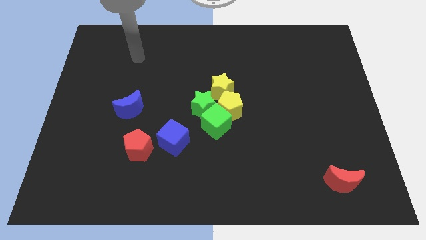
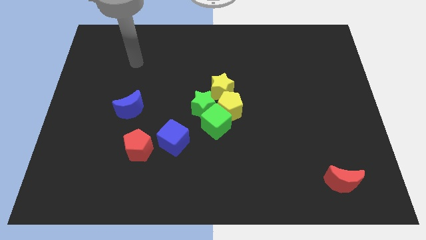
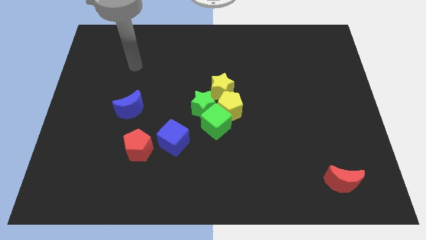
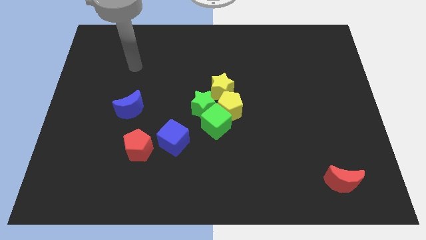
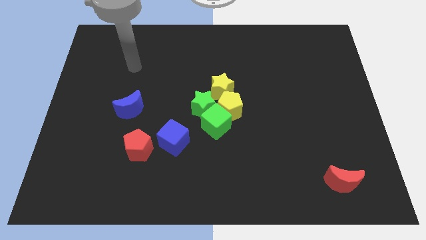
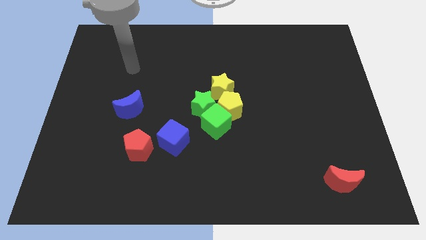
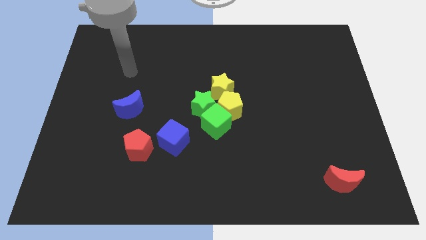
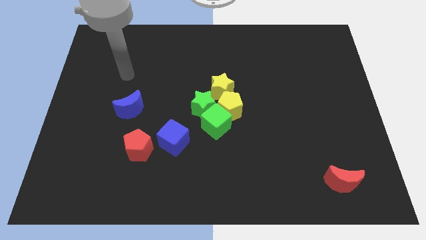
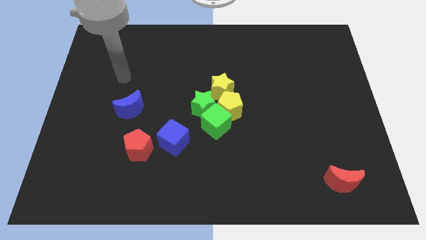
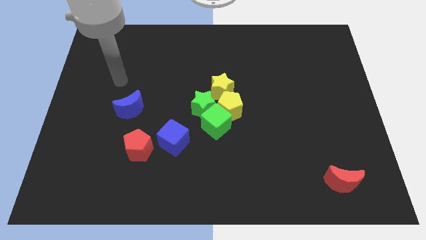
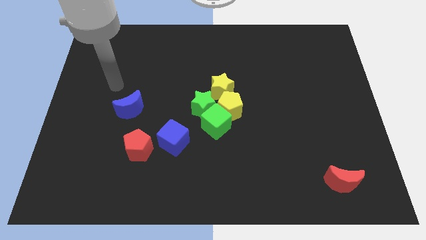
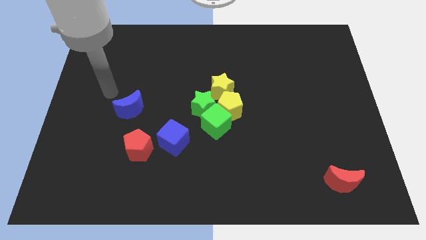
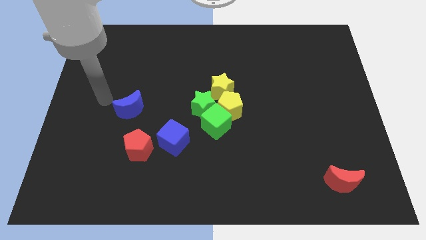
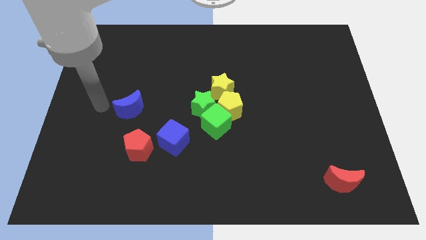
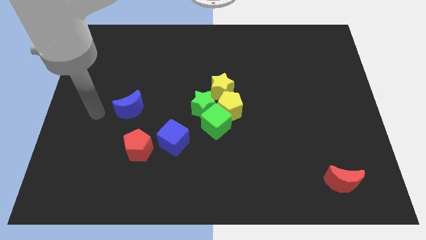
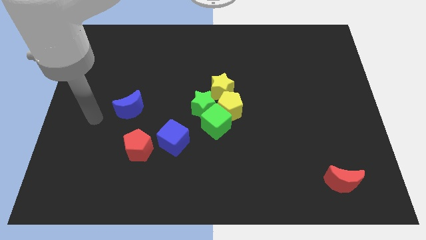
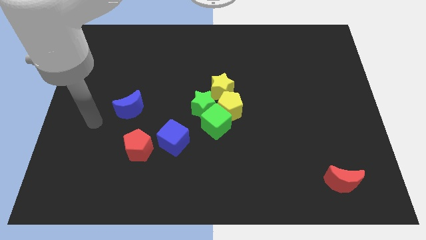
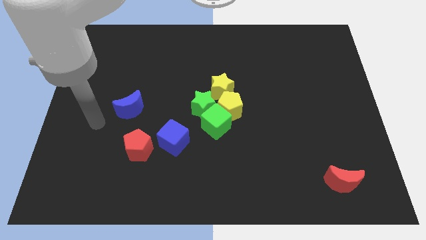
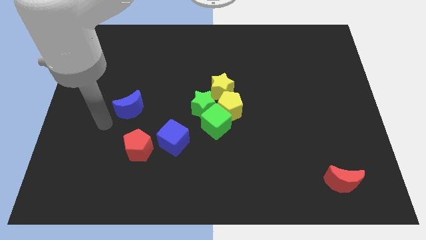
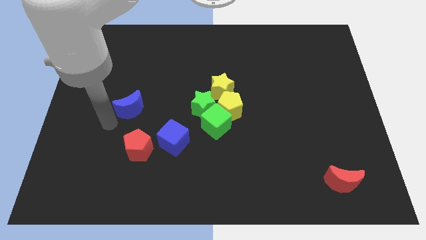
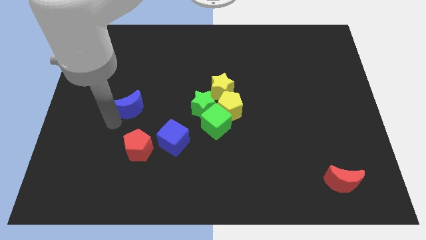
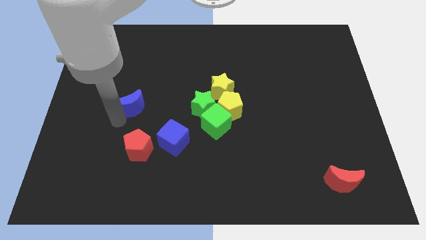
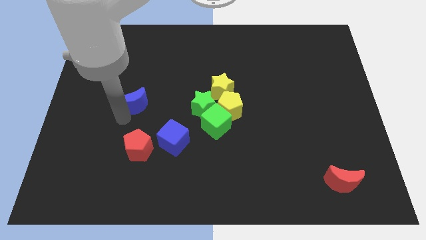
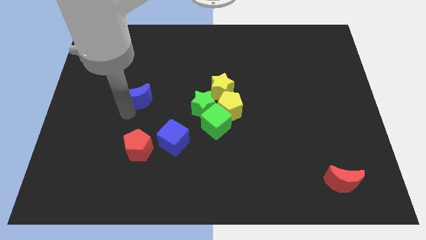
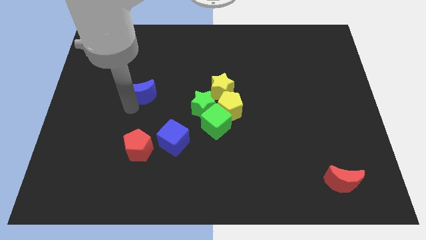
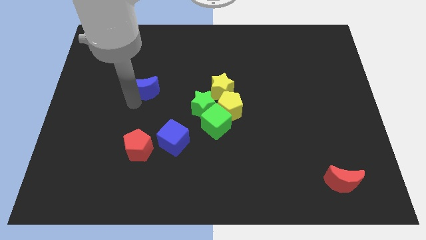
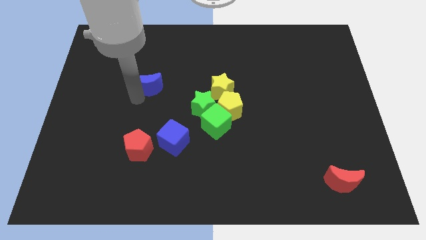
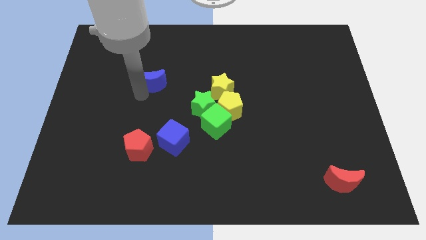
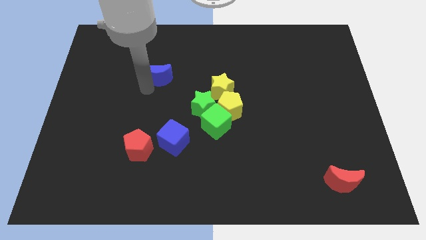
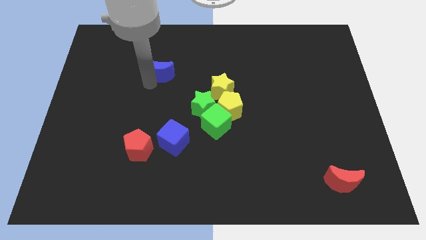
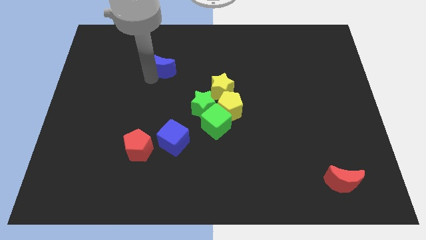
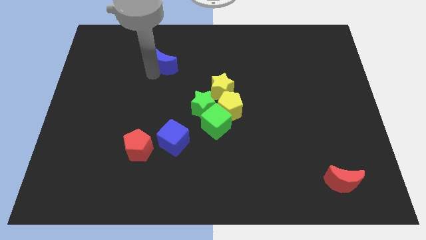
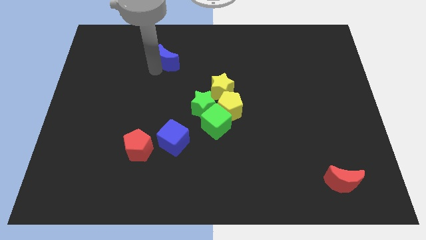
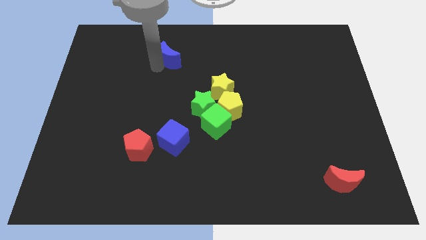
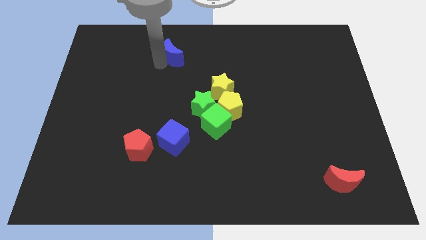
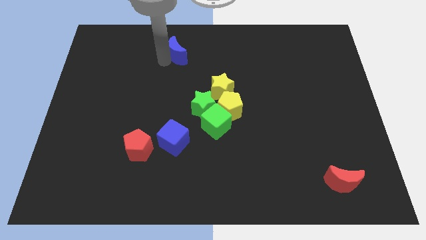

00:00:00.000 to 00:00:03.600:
push the blue crescent towards the top right

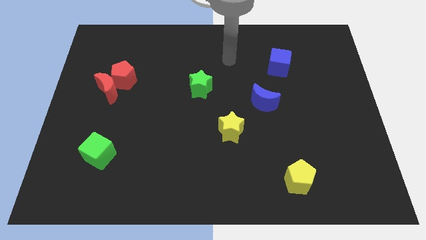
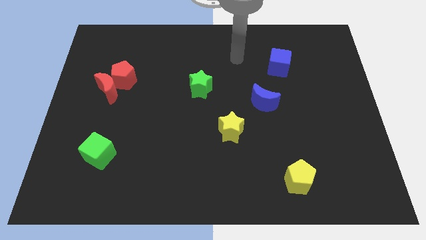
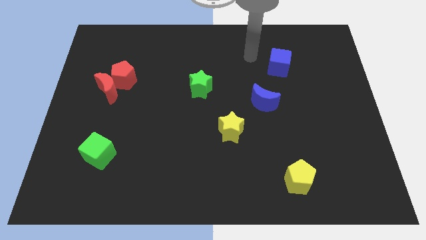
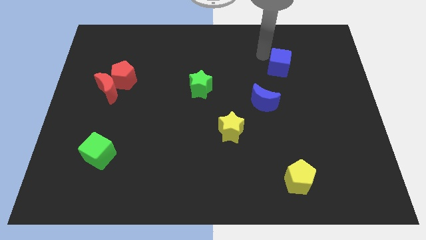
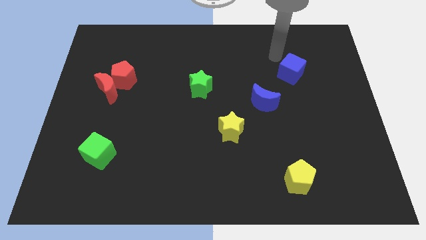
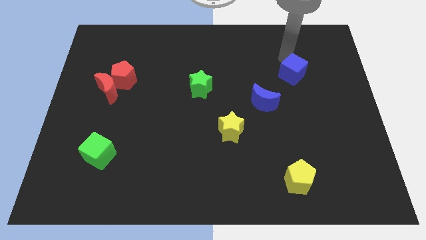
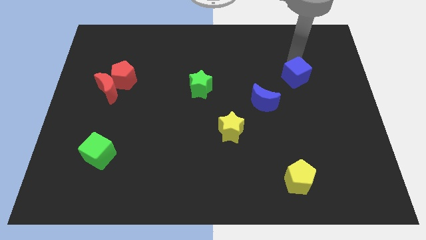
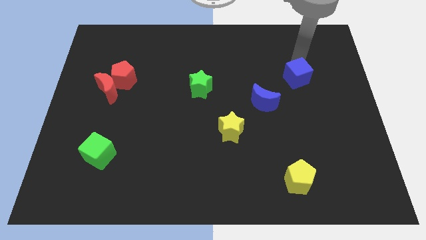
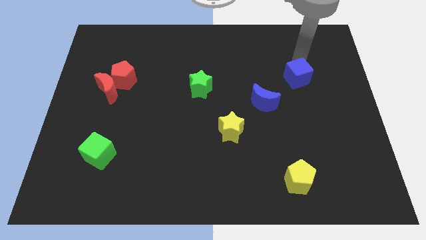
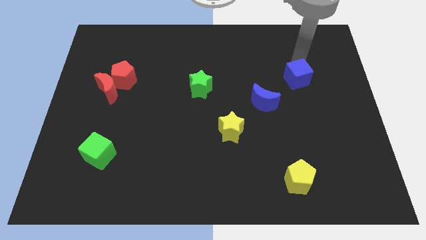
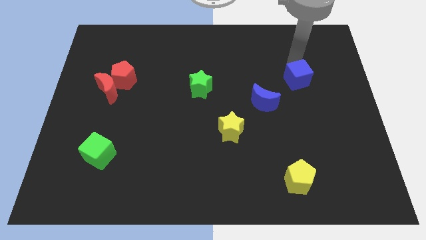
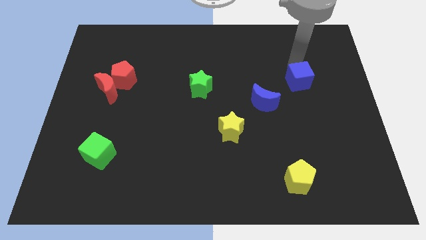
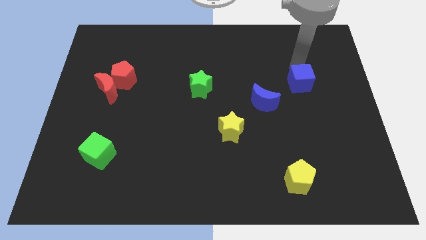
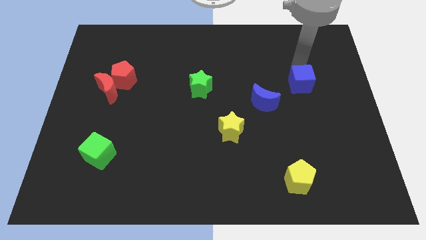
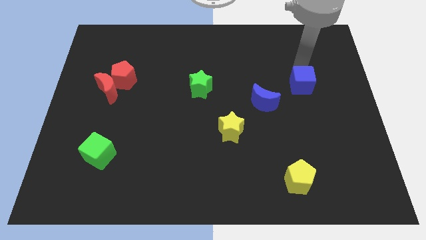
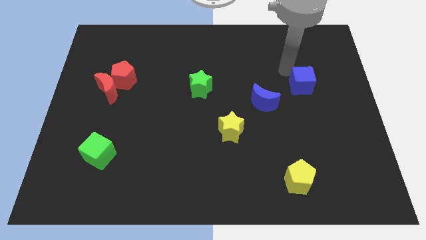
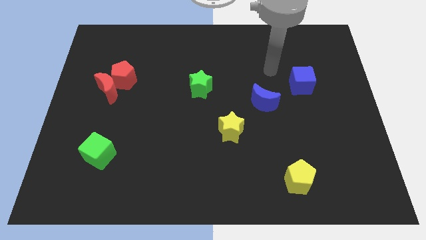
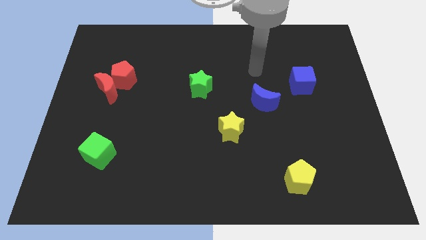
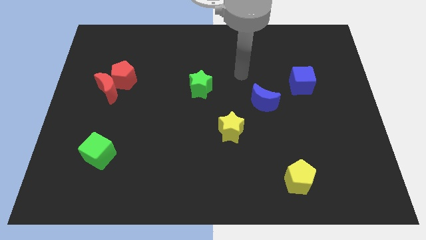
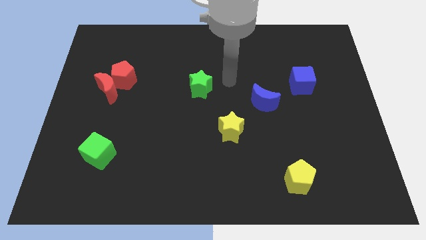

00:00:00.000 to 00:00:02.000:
push the blue cube diagonally on the top right side of the blue crescent

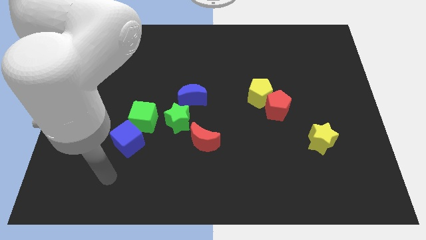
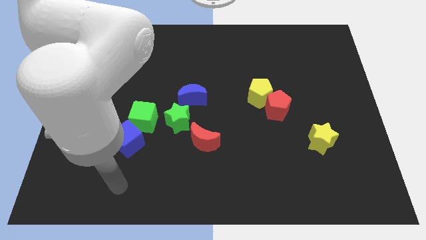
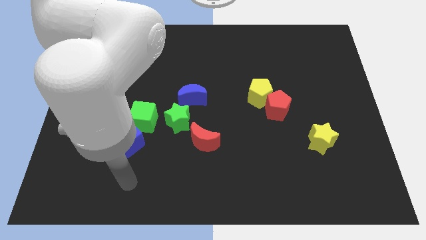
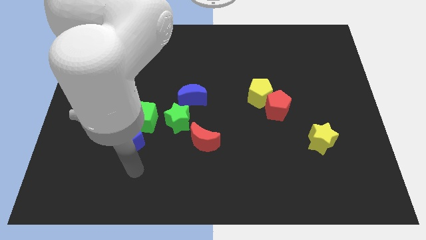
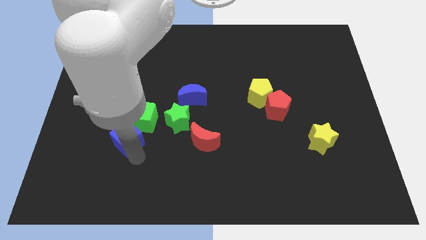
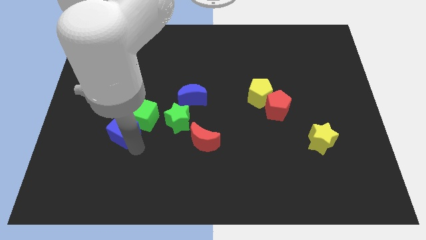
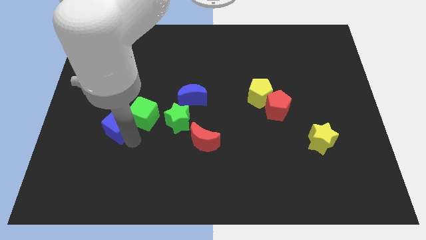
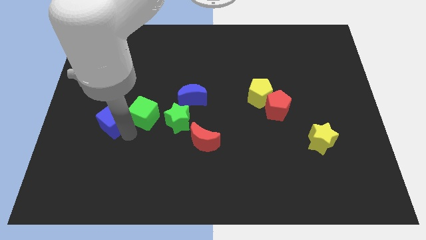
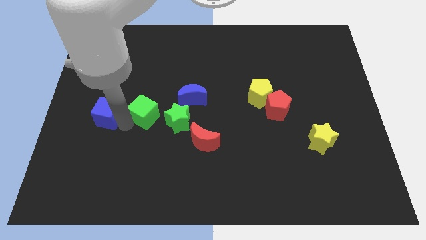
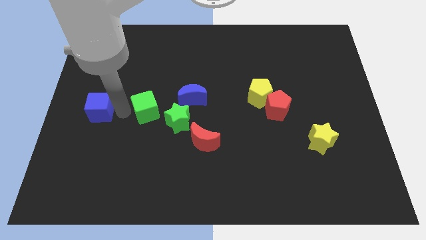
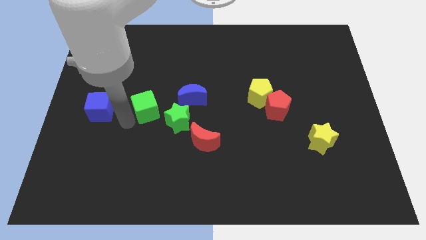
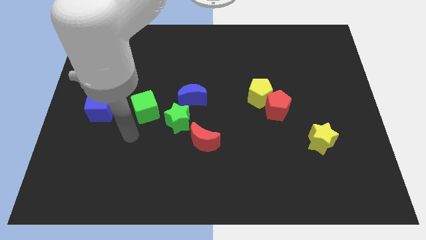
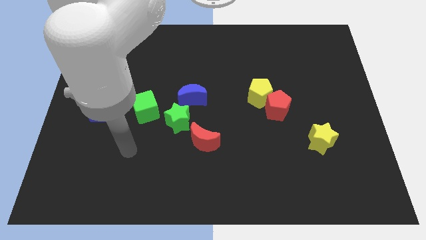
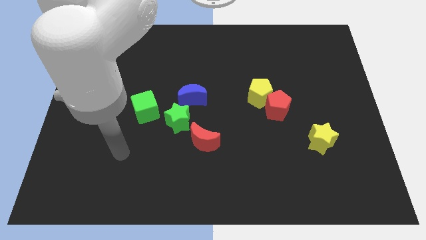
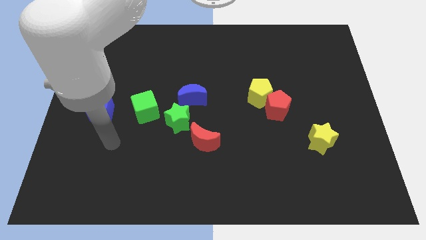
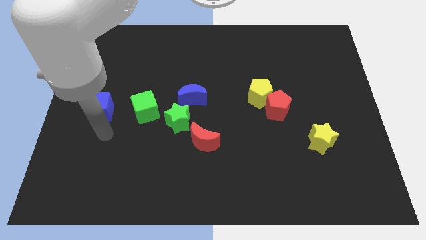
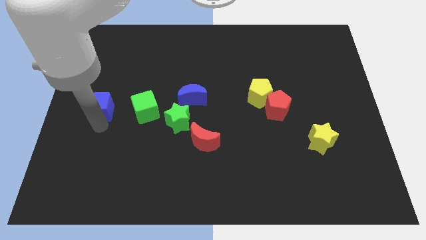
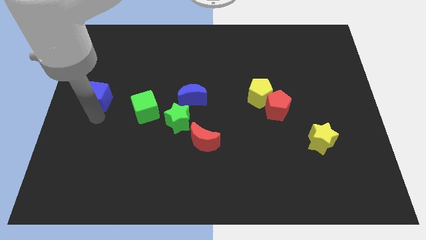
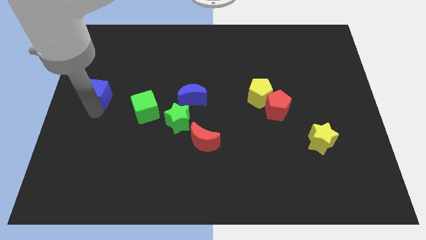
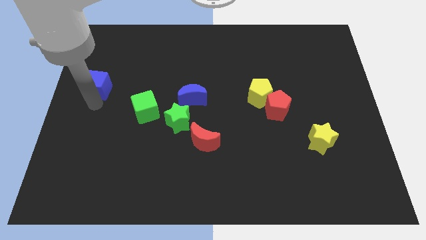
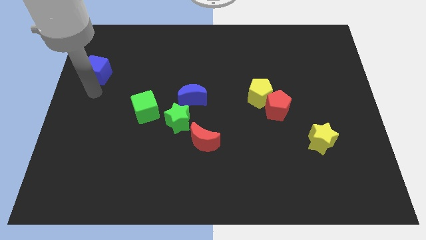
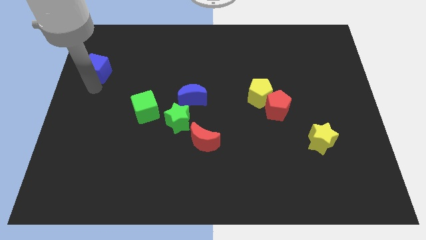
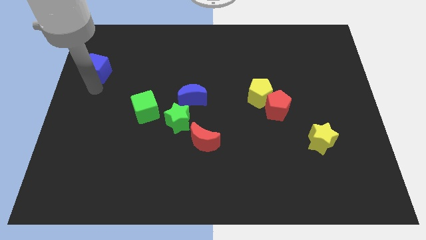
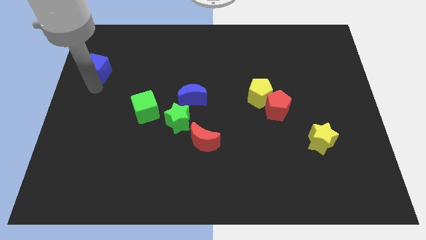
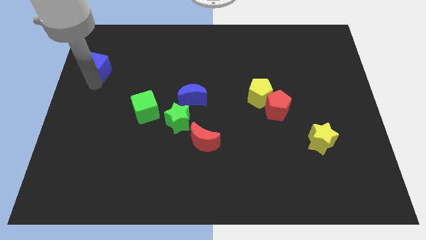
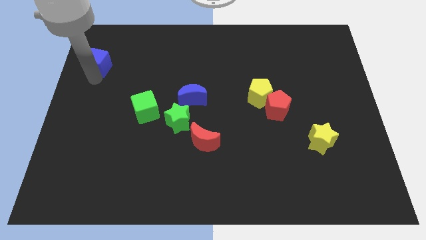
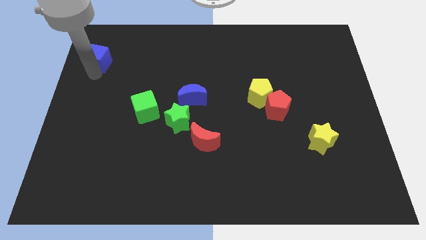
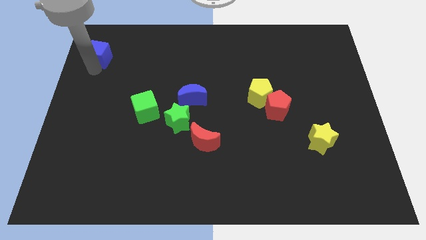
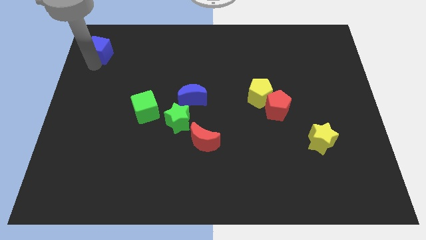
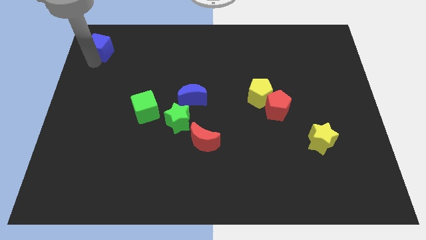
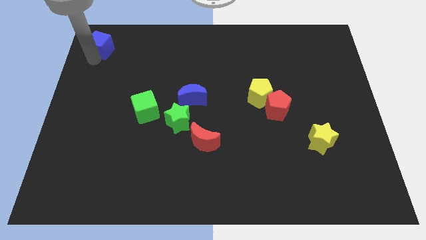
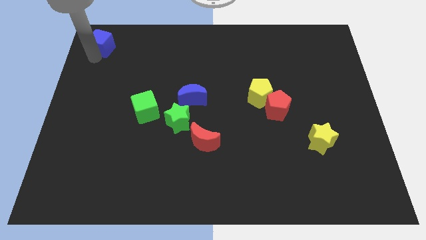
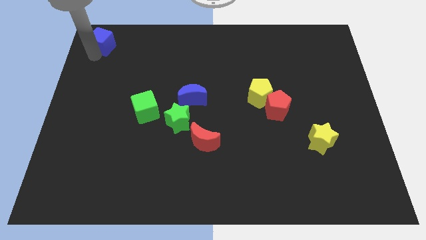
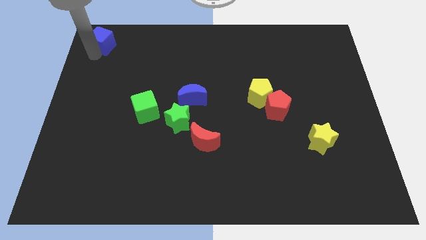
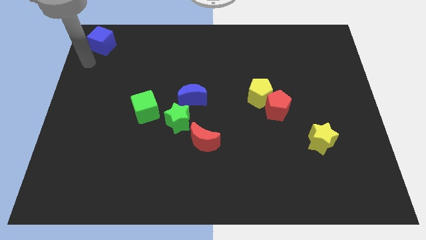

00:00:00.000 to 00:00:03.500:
drag blue cube upwards to the top left side of the board
